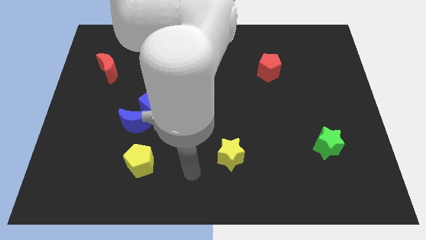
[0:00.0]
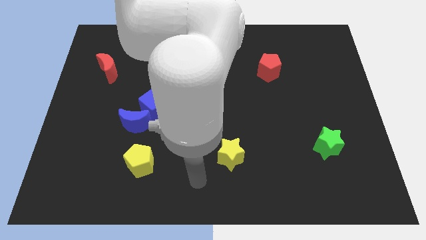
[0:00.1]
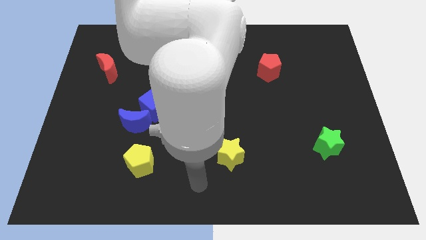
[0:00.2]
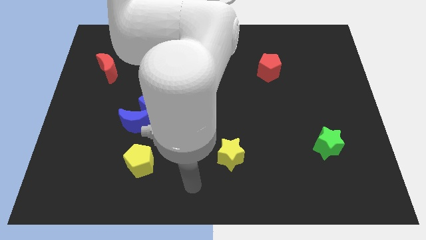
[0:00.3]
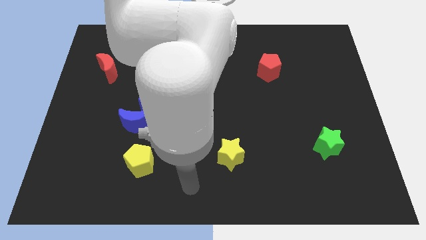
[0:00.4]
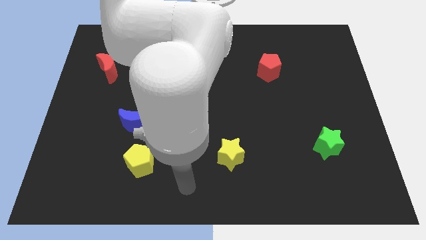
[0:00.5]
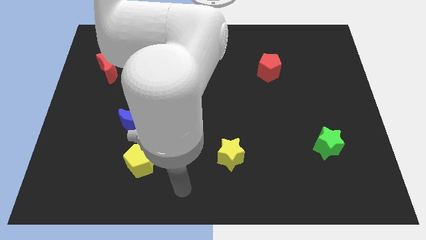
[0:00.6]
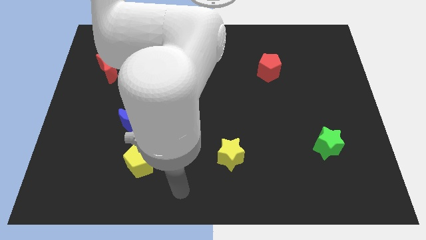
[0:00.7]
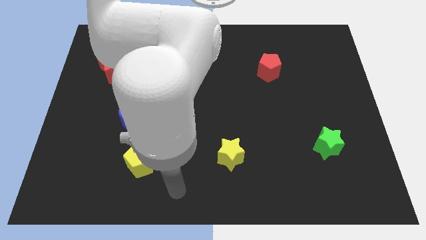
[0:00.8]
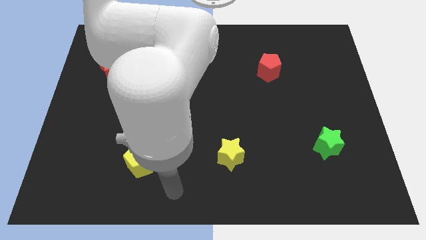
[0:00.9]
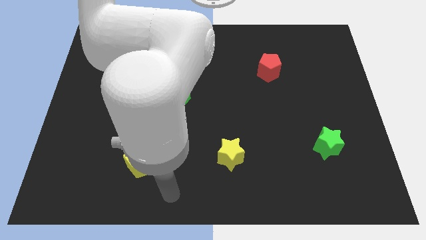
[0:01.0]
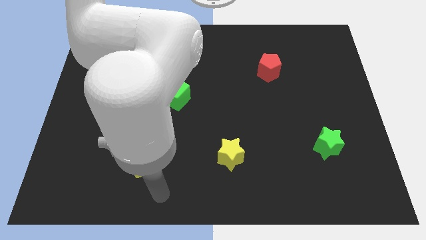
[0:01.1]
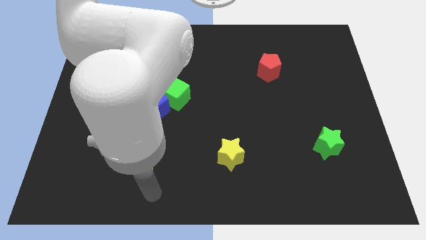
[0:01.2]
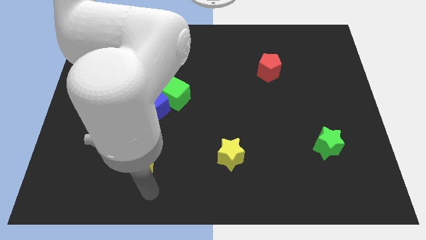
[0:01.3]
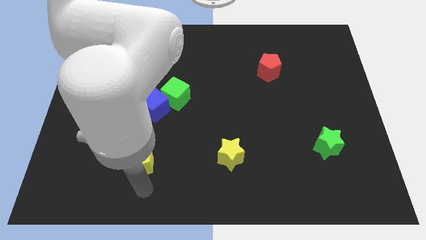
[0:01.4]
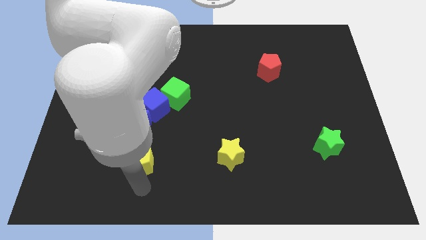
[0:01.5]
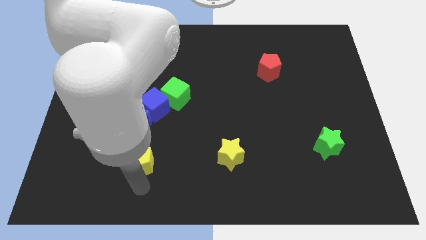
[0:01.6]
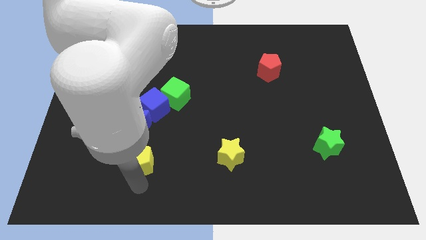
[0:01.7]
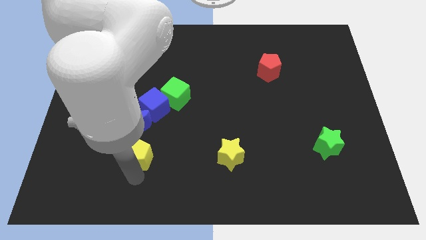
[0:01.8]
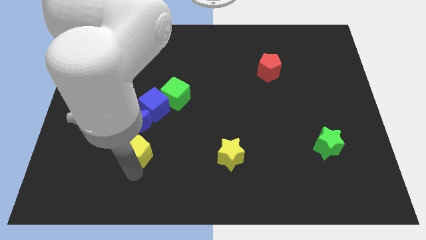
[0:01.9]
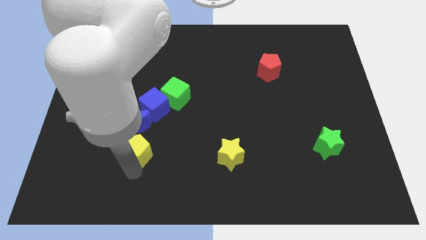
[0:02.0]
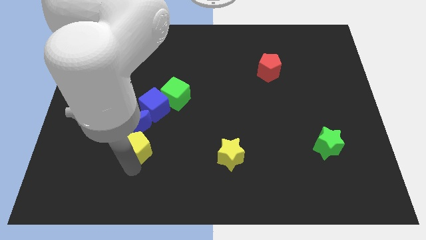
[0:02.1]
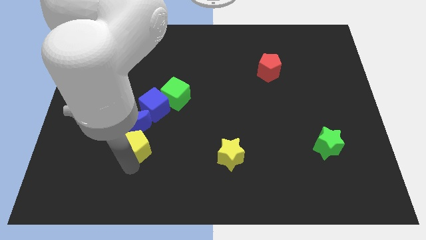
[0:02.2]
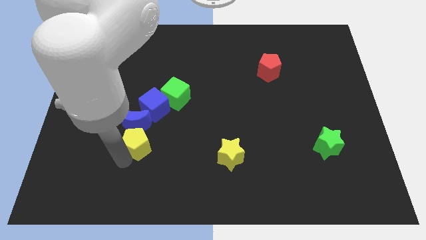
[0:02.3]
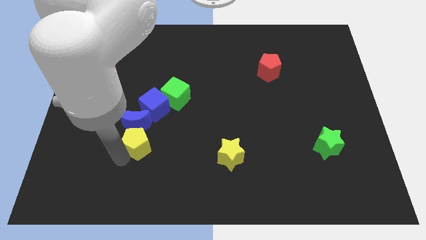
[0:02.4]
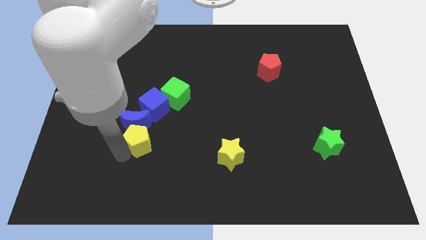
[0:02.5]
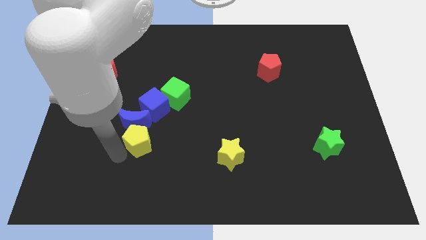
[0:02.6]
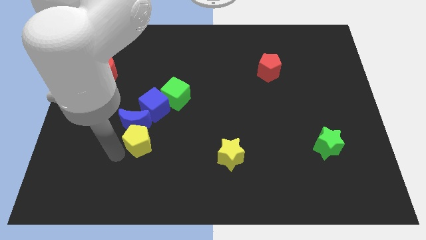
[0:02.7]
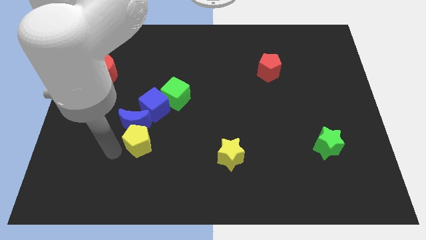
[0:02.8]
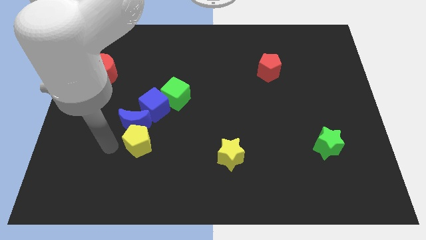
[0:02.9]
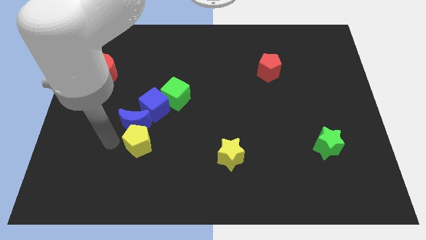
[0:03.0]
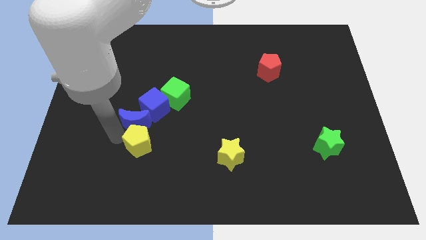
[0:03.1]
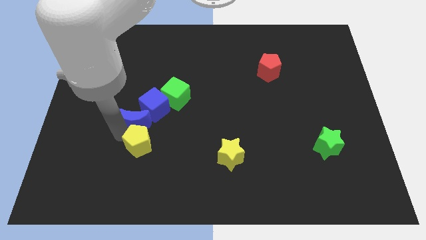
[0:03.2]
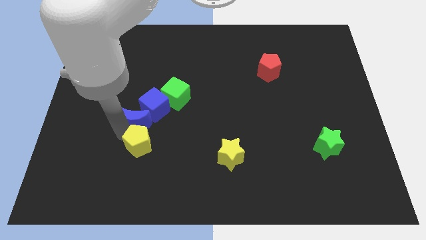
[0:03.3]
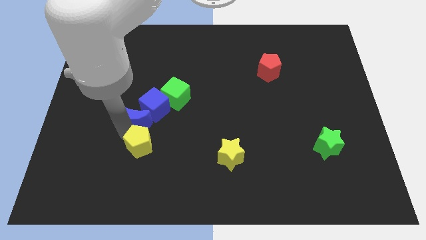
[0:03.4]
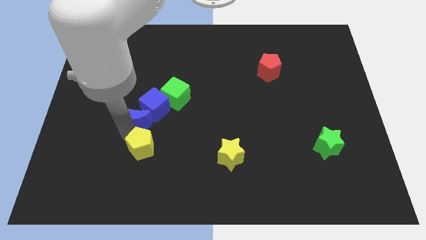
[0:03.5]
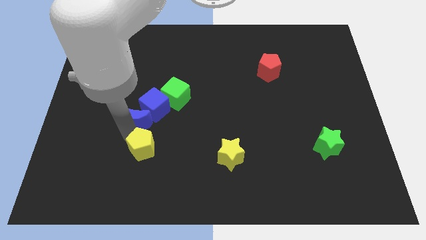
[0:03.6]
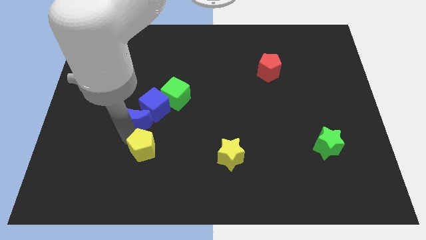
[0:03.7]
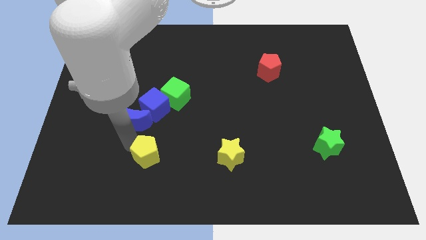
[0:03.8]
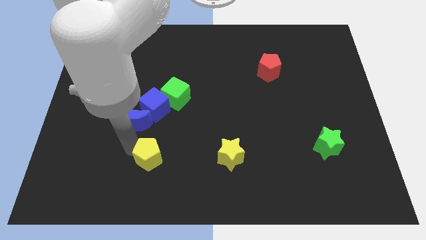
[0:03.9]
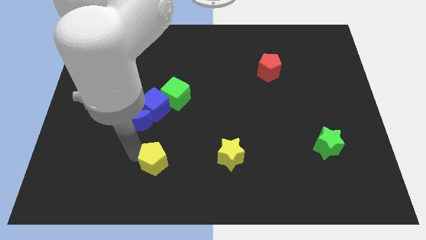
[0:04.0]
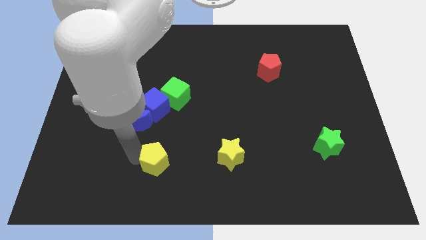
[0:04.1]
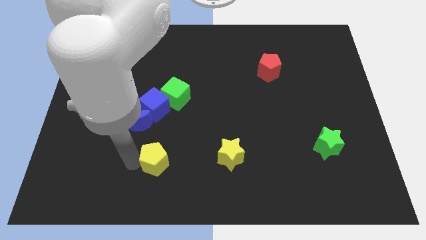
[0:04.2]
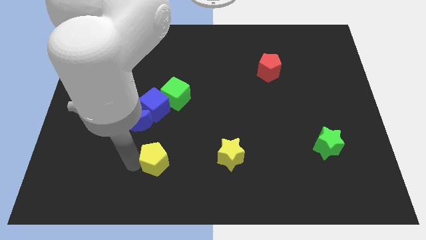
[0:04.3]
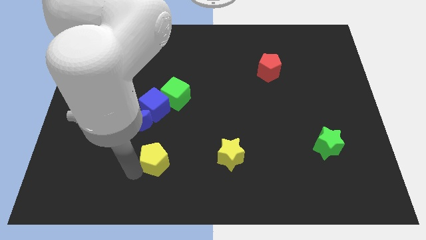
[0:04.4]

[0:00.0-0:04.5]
push the yellow pentagon to the left of the yellow star

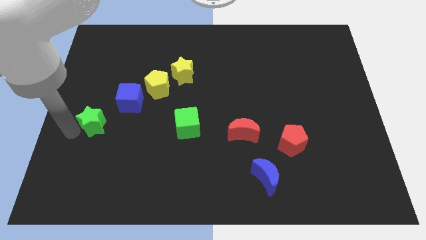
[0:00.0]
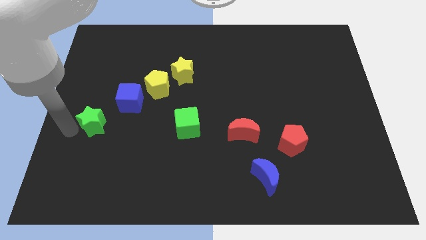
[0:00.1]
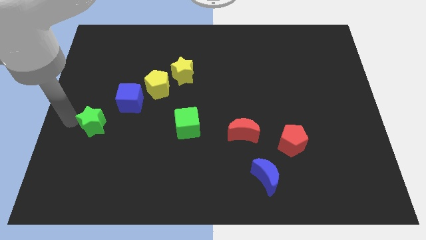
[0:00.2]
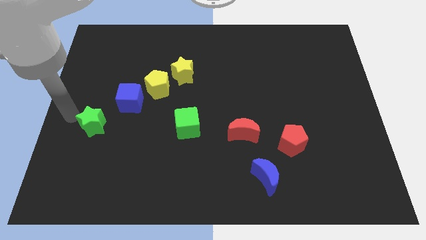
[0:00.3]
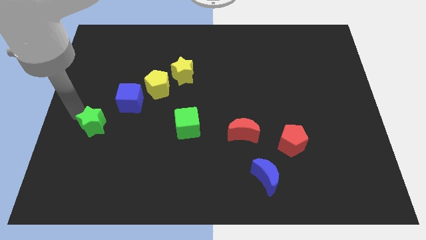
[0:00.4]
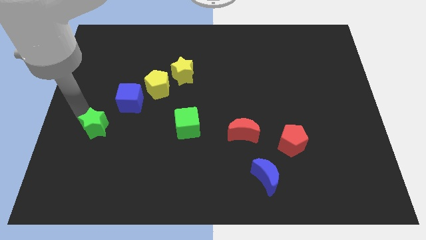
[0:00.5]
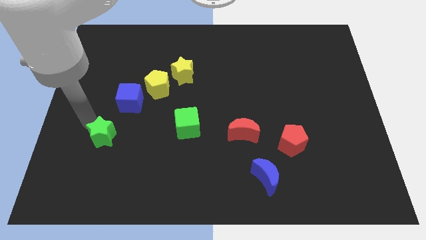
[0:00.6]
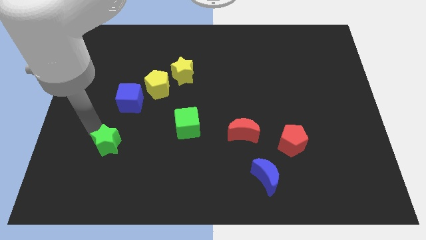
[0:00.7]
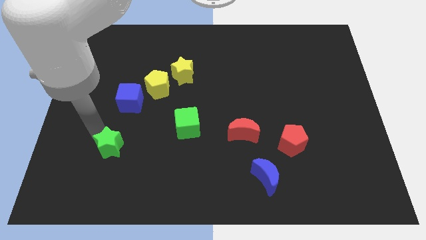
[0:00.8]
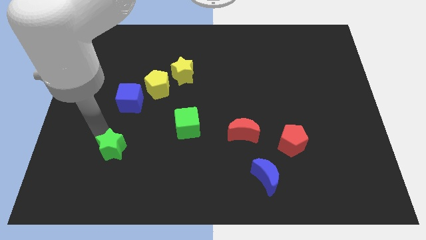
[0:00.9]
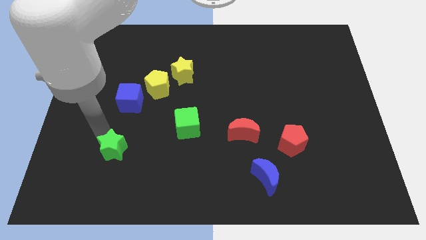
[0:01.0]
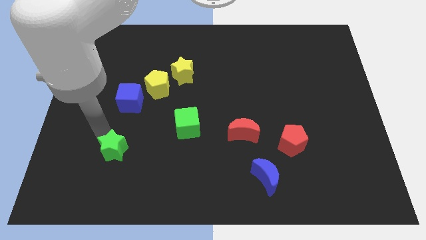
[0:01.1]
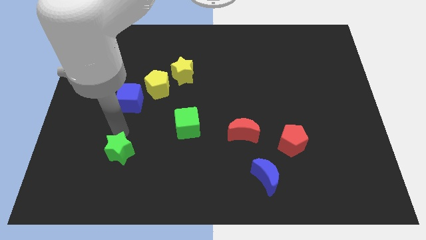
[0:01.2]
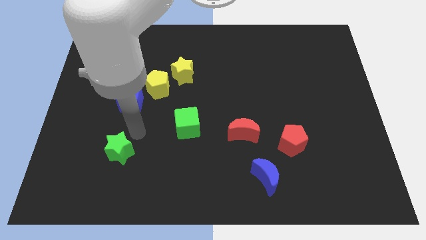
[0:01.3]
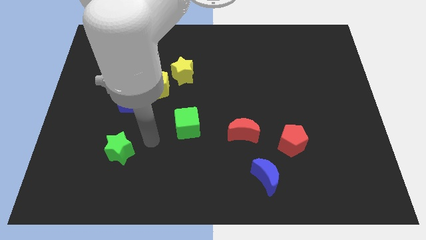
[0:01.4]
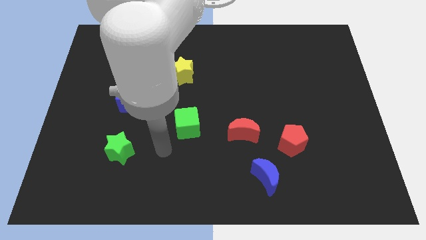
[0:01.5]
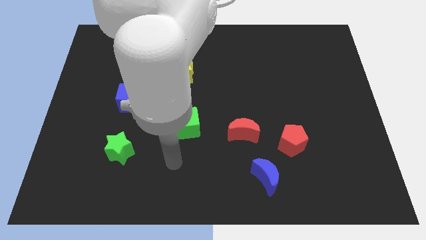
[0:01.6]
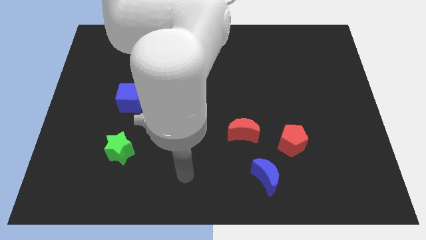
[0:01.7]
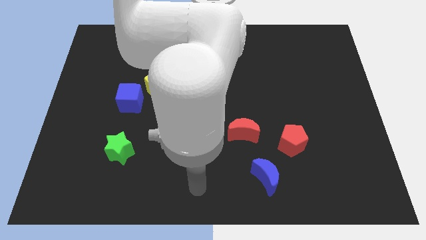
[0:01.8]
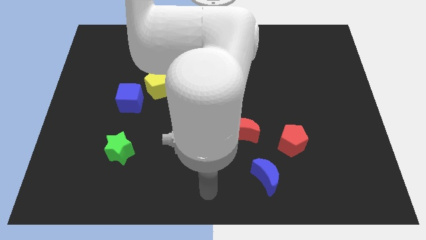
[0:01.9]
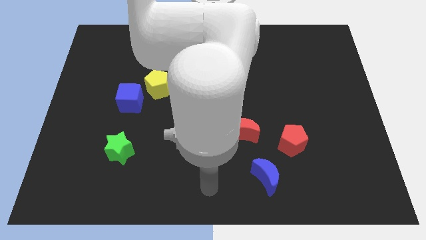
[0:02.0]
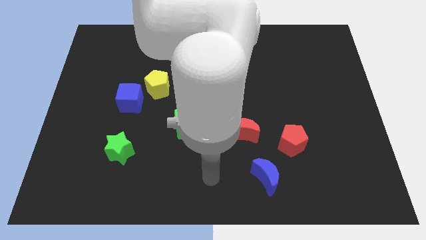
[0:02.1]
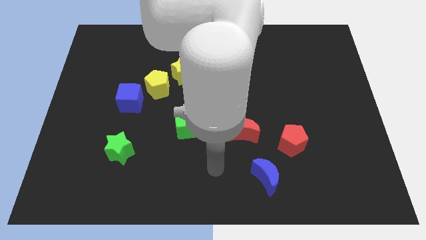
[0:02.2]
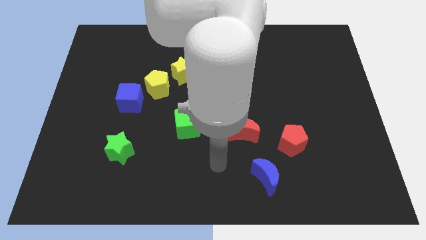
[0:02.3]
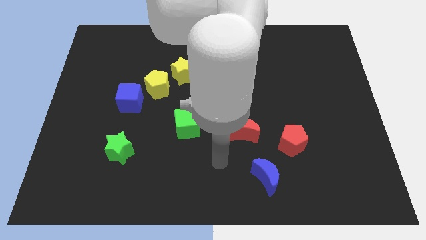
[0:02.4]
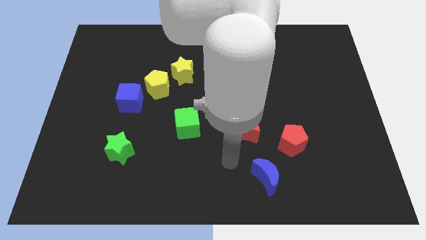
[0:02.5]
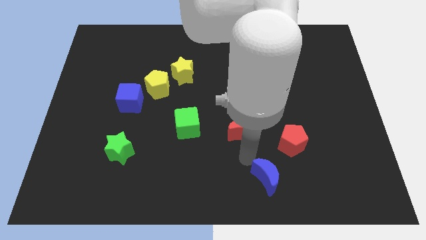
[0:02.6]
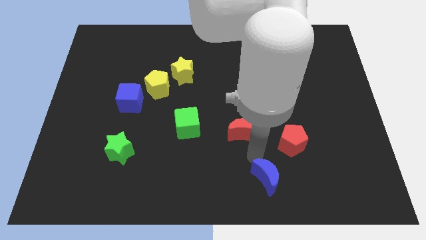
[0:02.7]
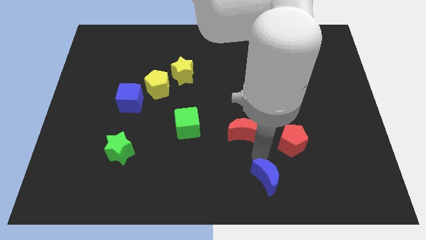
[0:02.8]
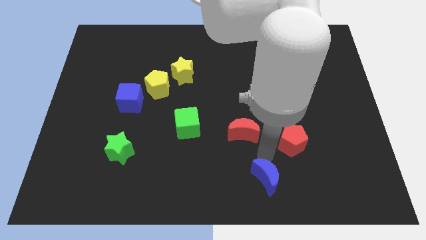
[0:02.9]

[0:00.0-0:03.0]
place your arm in between the red moon and blue moon

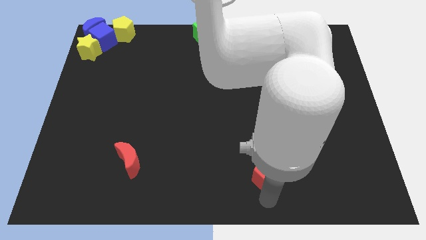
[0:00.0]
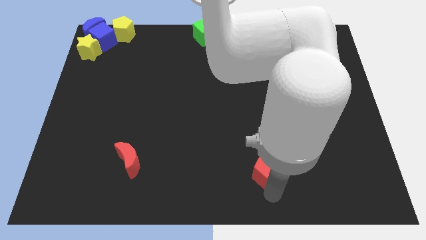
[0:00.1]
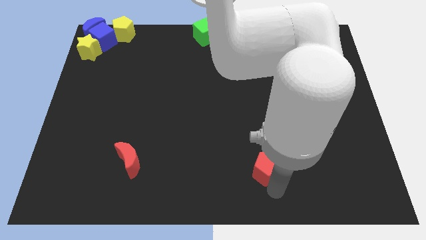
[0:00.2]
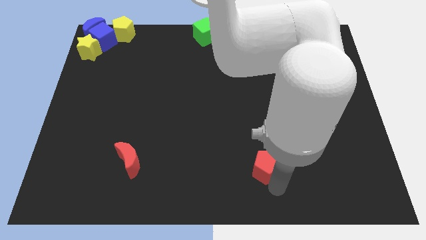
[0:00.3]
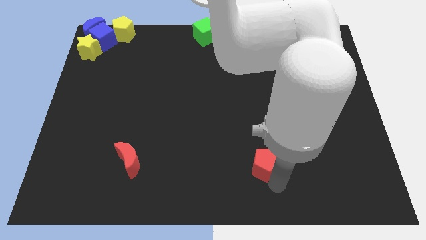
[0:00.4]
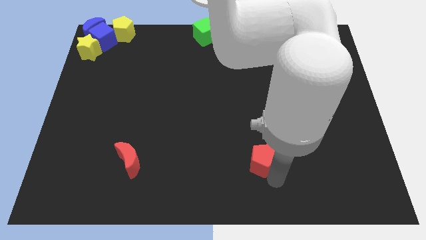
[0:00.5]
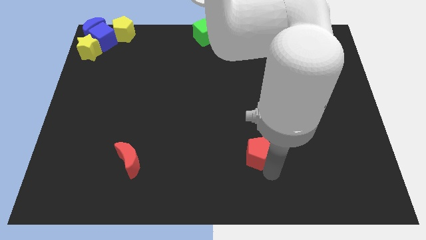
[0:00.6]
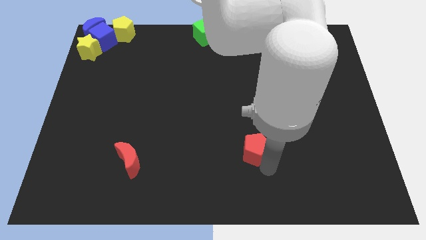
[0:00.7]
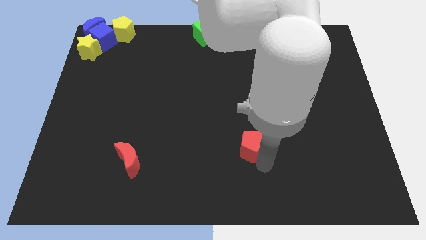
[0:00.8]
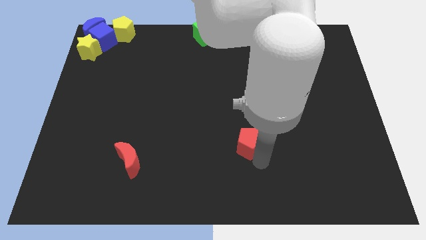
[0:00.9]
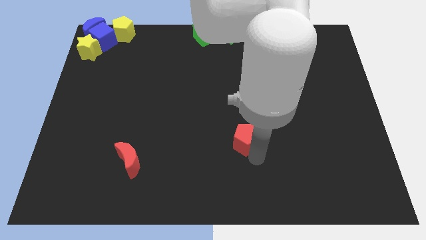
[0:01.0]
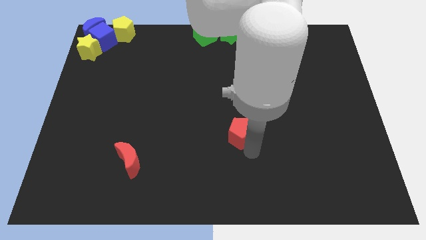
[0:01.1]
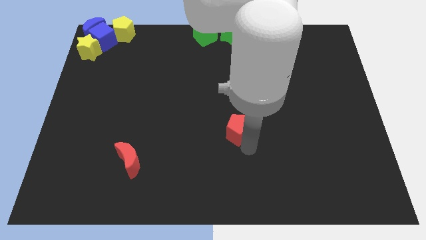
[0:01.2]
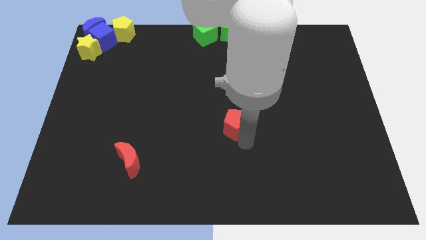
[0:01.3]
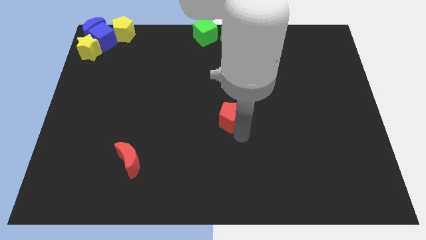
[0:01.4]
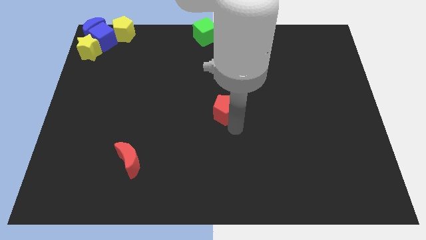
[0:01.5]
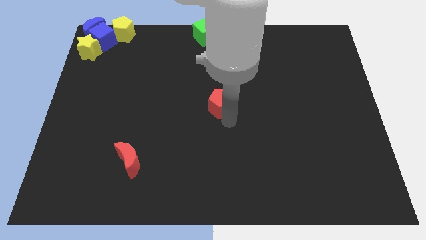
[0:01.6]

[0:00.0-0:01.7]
move the red pentagon to the center
